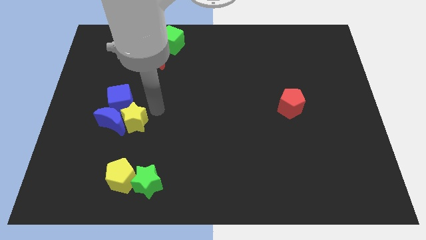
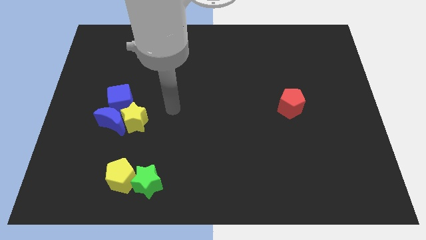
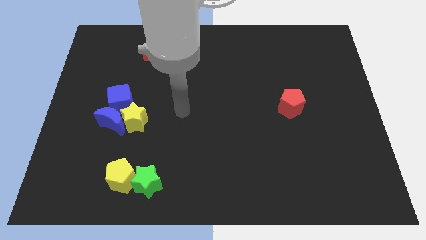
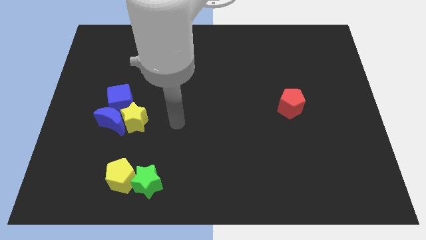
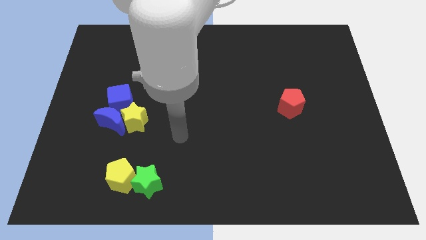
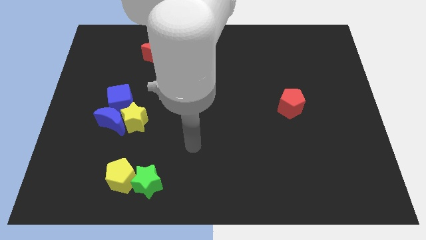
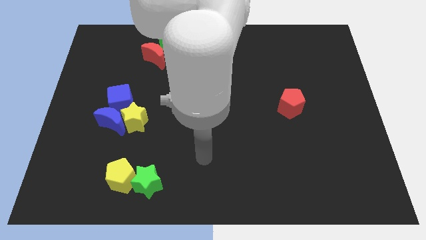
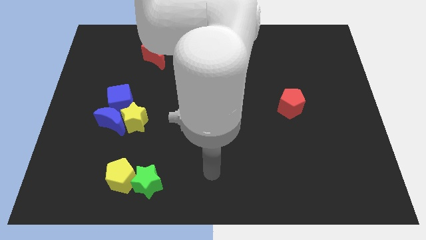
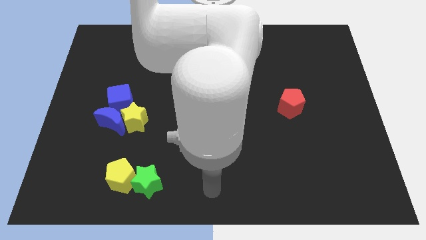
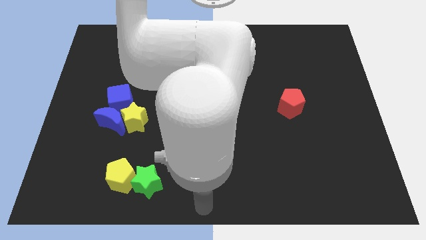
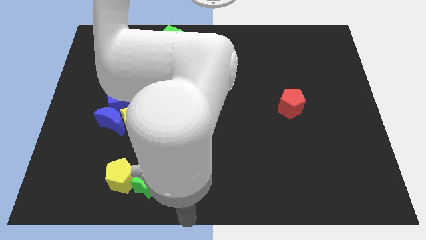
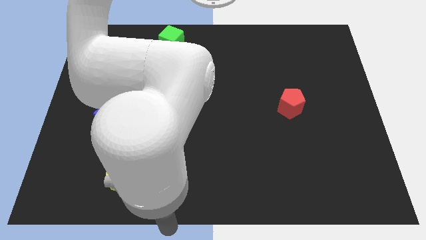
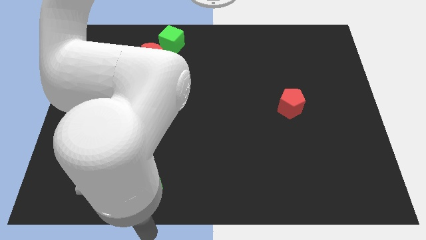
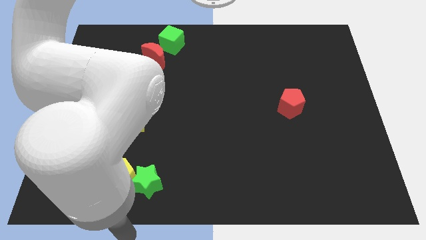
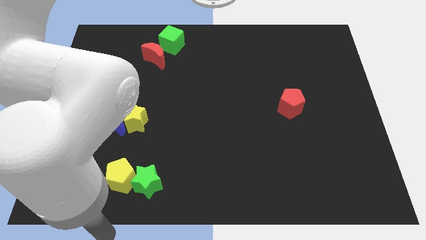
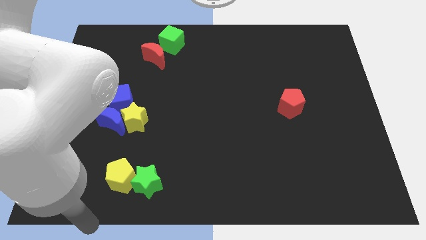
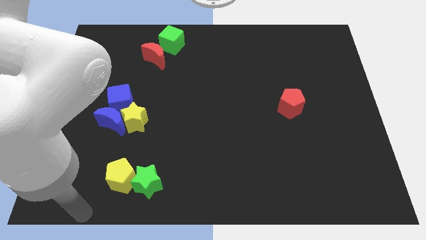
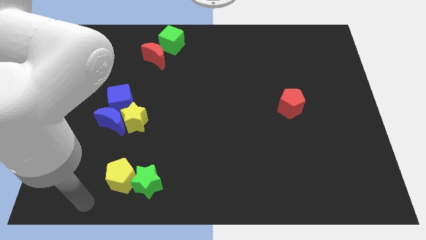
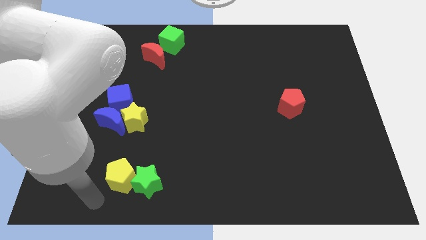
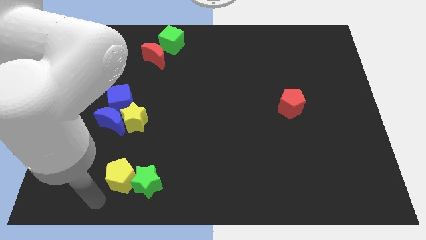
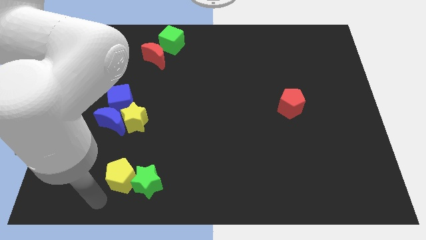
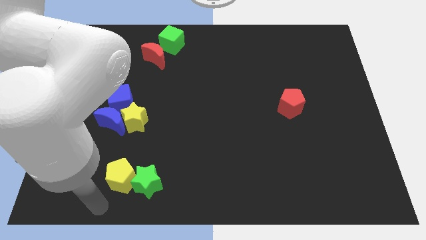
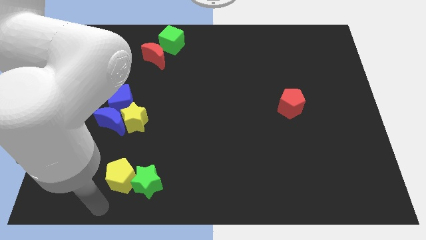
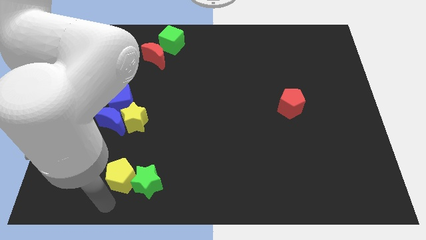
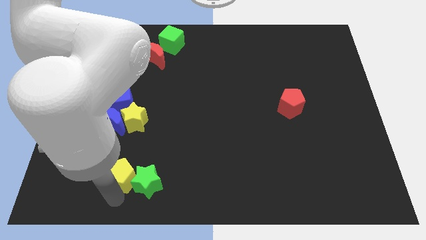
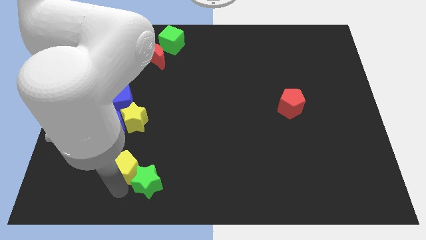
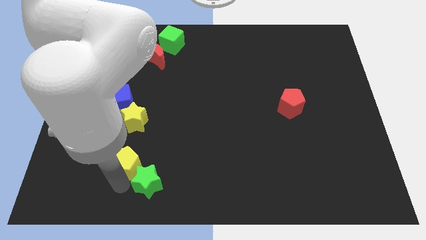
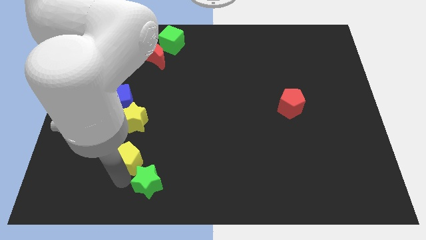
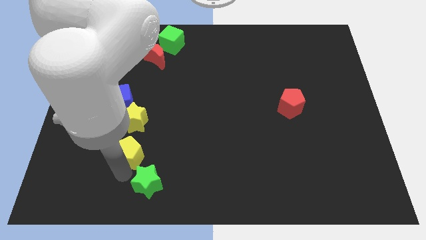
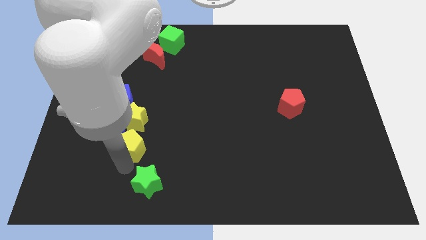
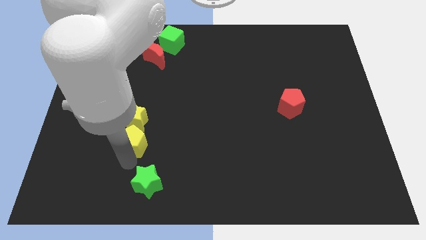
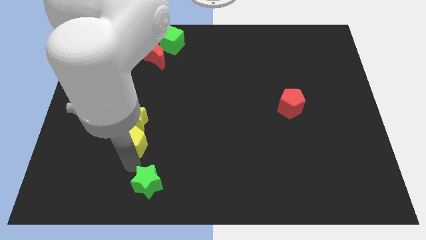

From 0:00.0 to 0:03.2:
place yellow pentagon below yellow star

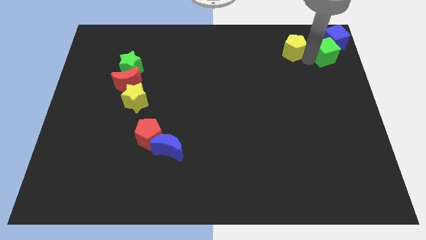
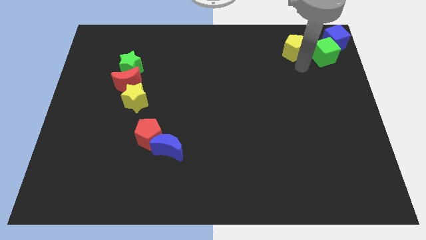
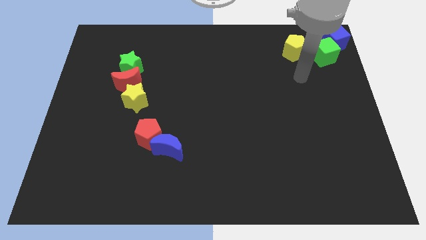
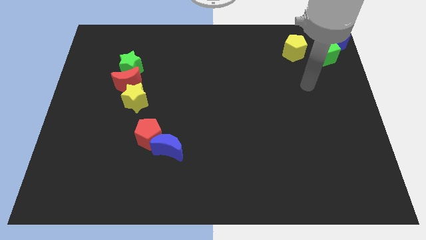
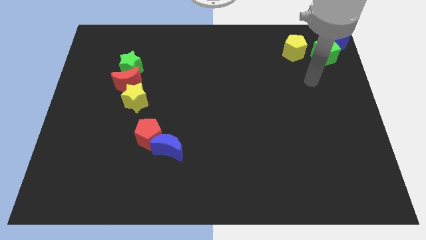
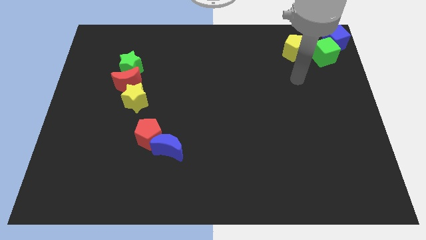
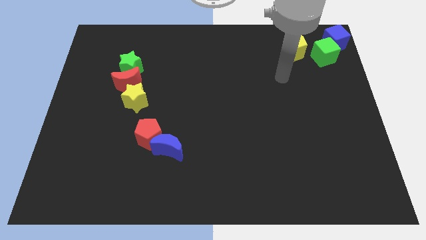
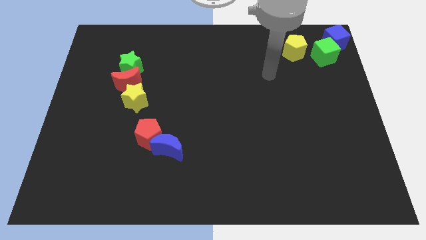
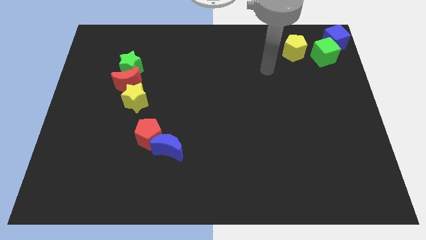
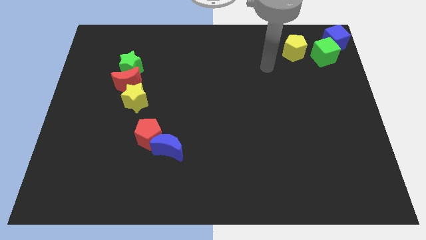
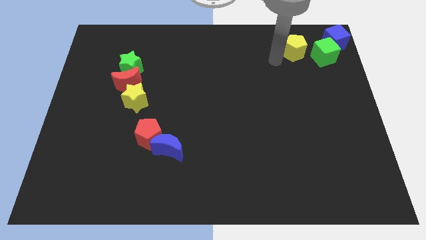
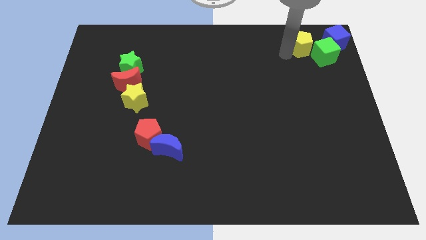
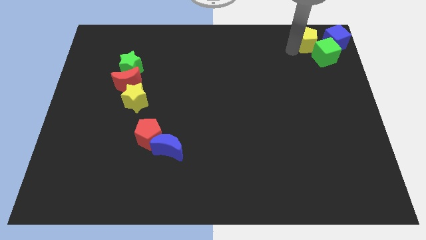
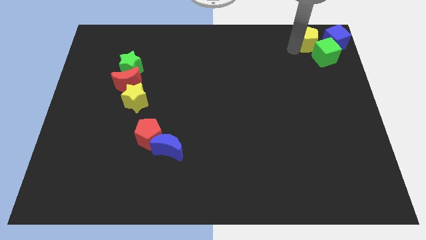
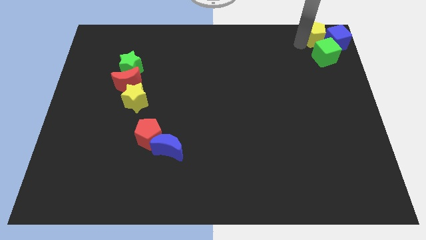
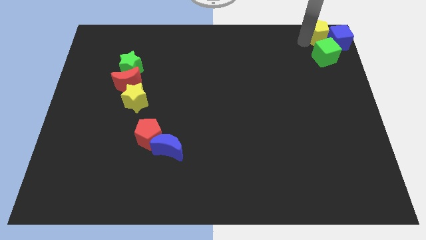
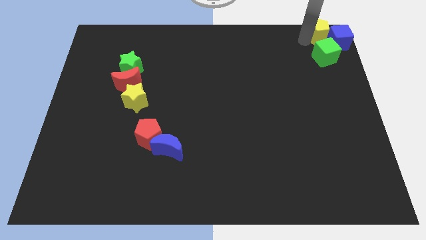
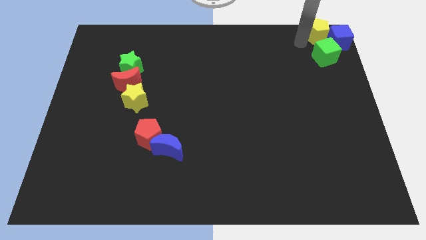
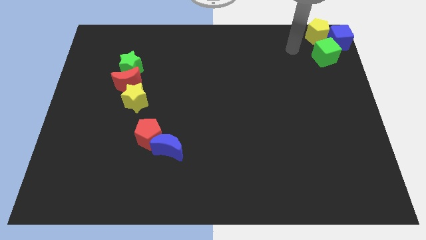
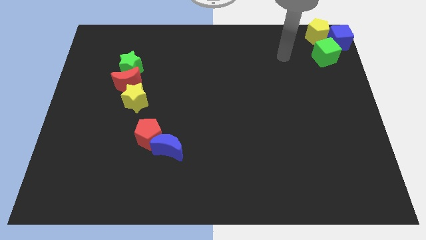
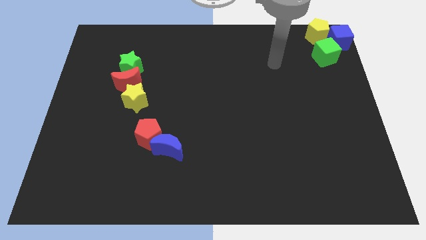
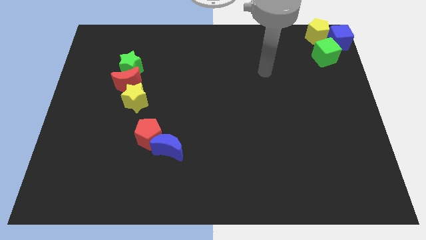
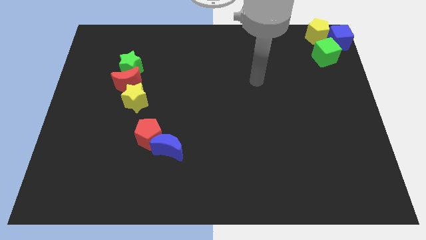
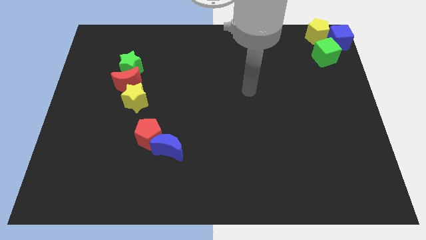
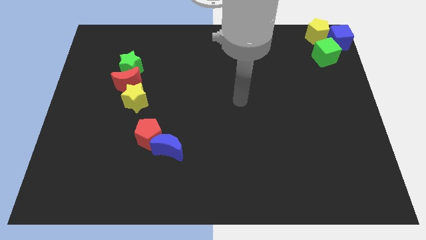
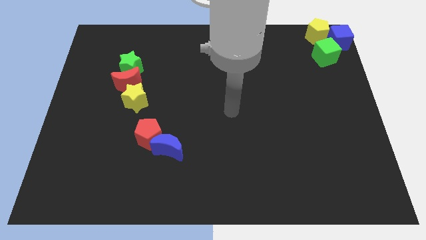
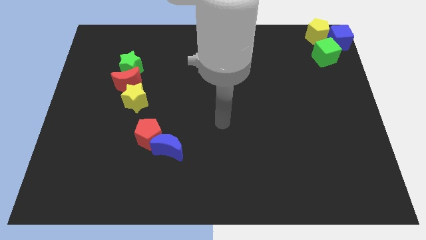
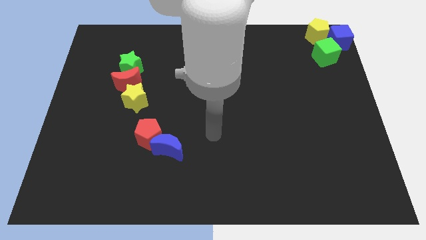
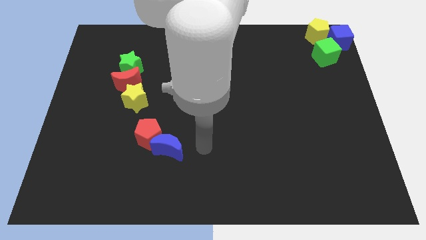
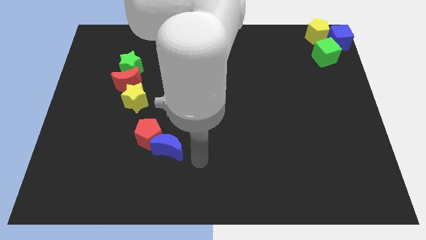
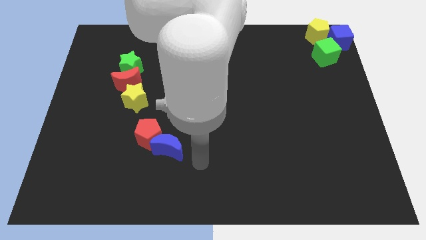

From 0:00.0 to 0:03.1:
move the yellow pentagon to the top right of the board

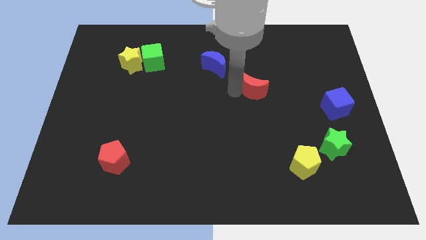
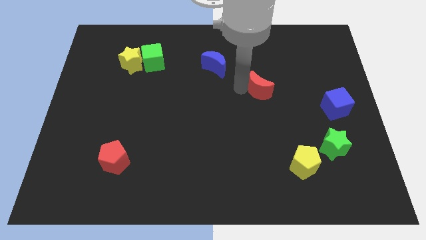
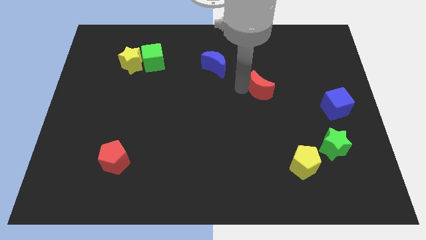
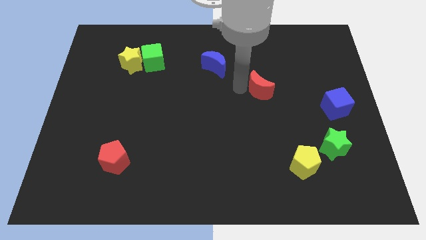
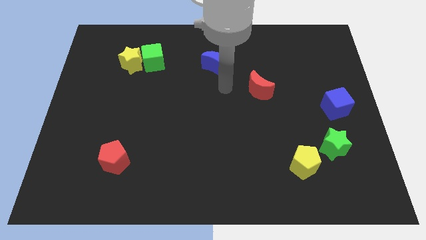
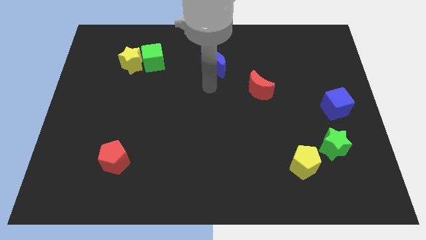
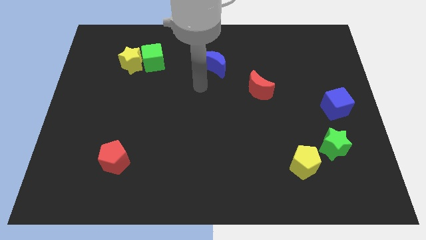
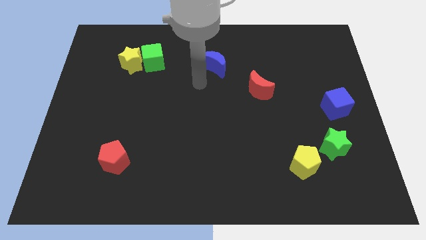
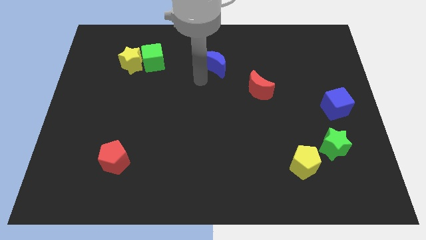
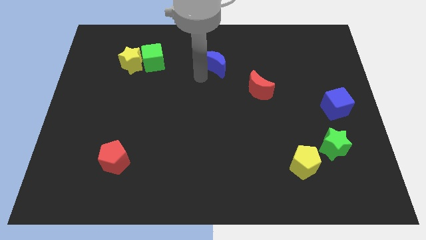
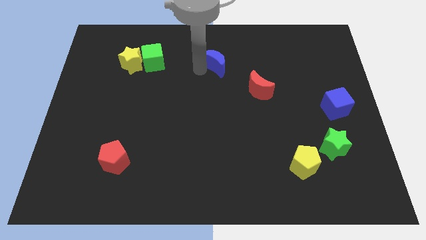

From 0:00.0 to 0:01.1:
move your arm away from the red moon

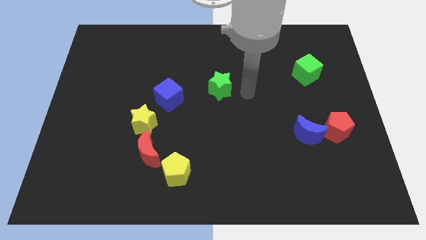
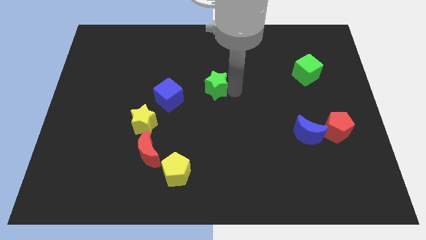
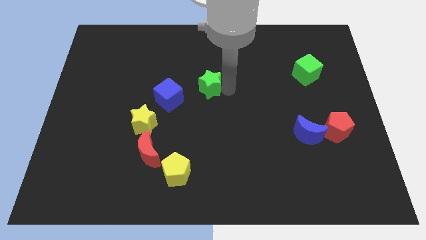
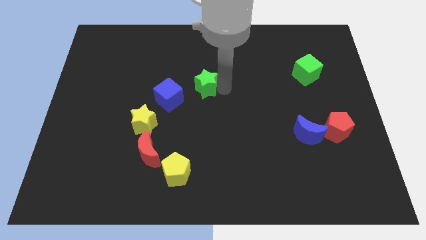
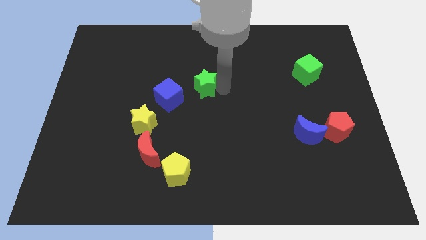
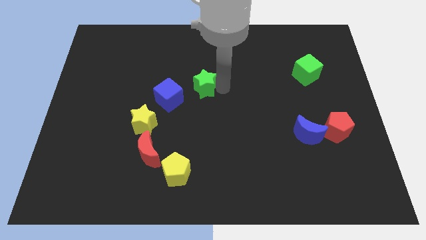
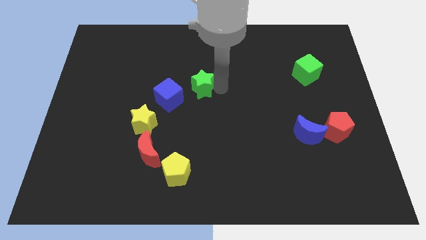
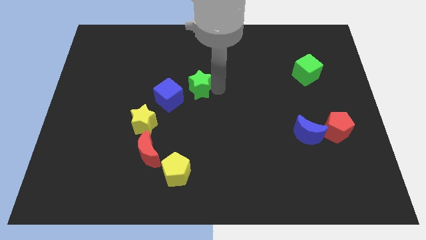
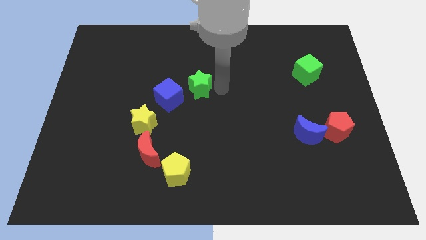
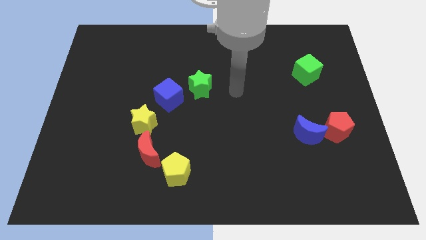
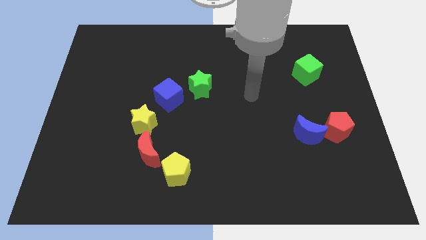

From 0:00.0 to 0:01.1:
move the green star to the right side of the blue cube

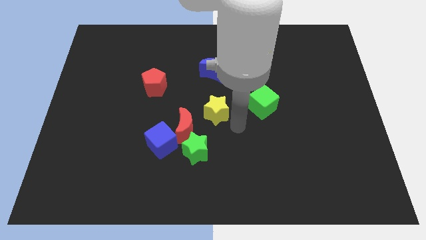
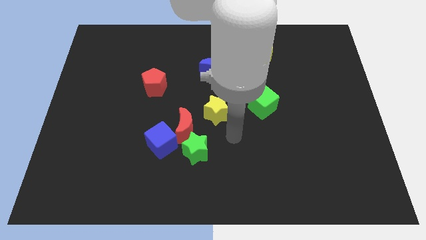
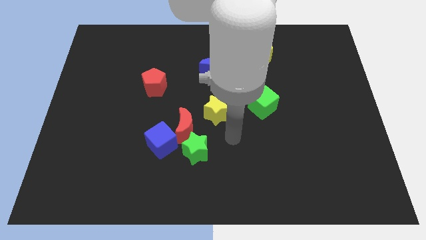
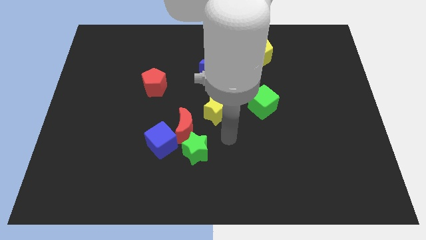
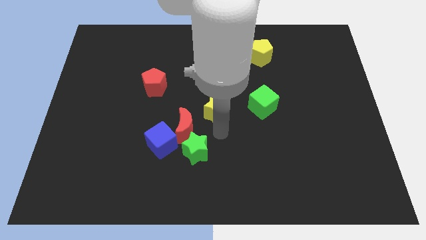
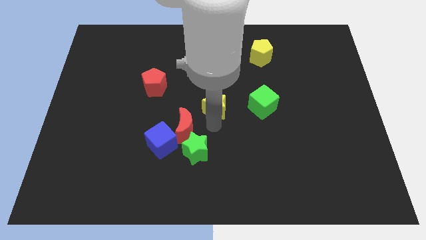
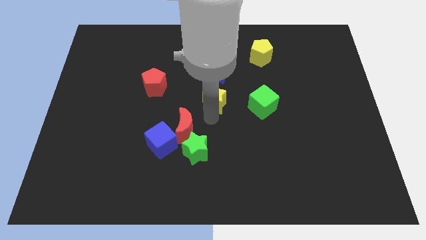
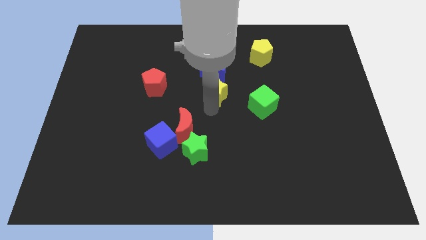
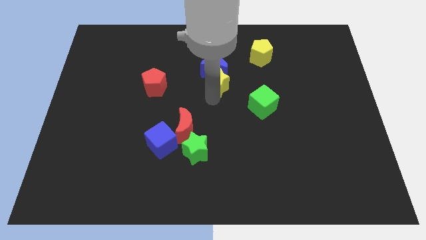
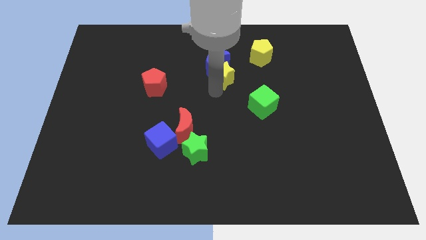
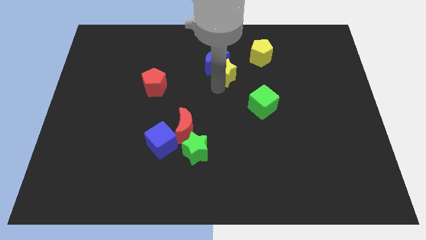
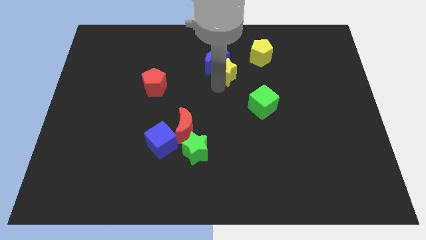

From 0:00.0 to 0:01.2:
push the yellow star into blue crescent
